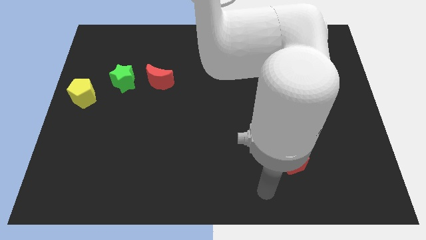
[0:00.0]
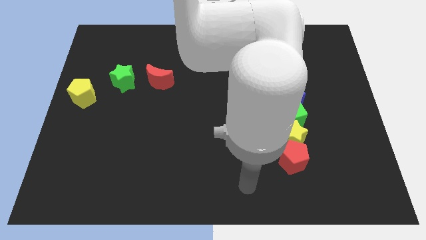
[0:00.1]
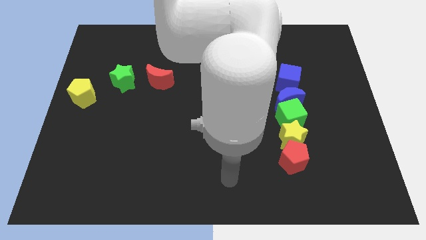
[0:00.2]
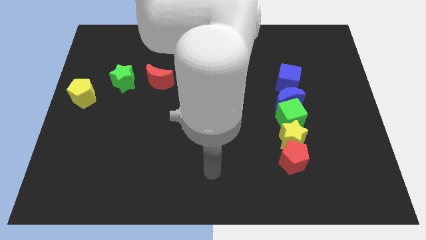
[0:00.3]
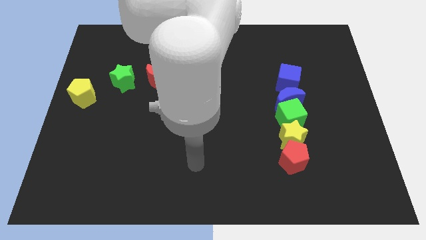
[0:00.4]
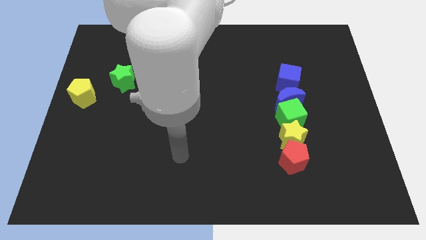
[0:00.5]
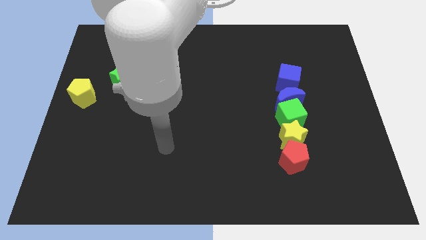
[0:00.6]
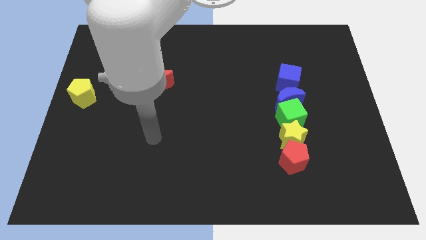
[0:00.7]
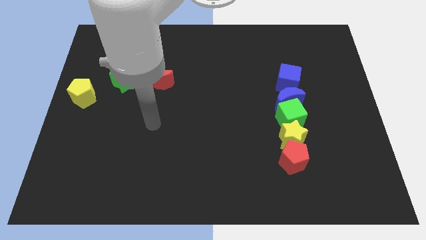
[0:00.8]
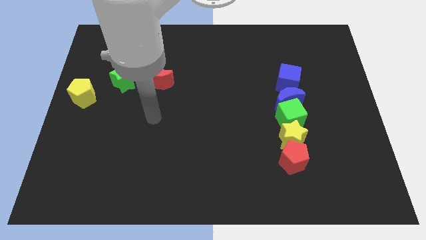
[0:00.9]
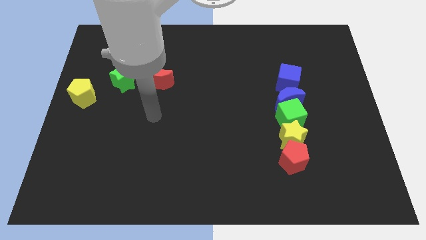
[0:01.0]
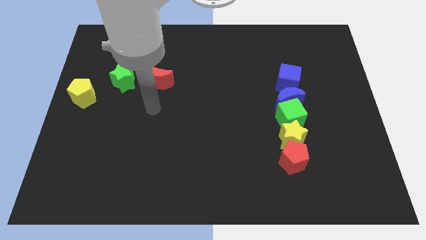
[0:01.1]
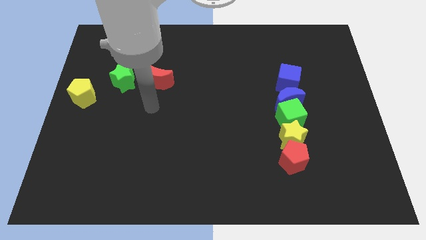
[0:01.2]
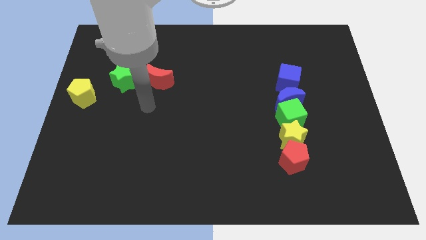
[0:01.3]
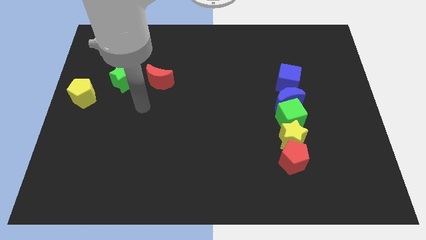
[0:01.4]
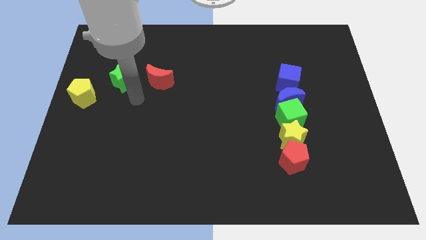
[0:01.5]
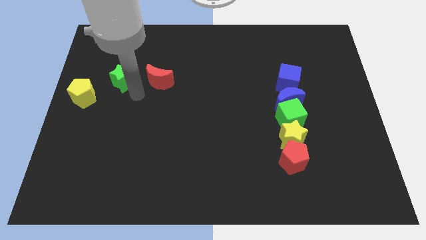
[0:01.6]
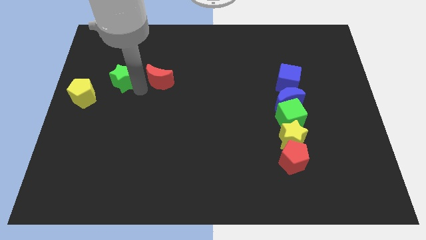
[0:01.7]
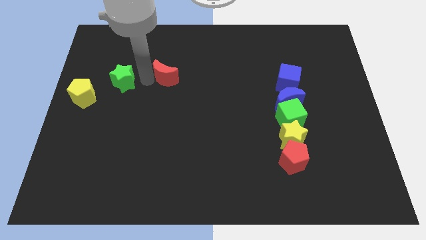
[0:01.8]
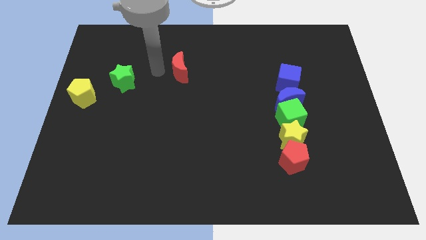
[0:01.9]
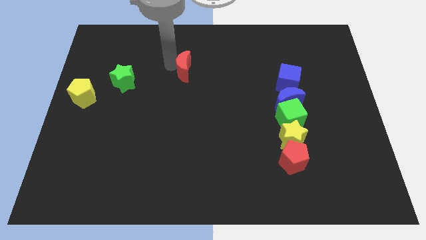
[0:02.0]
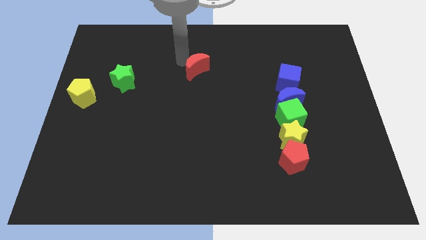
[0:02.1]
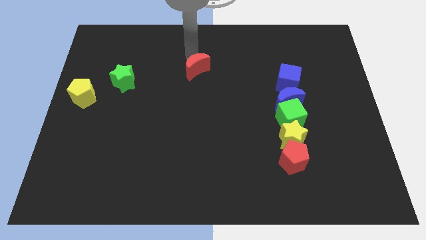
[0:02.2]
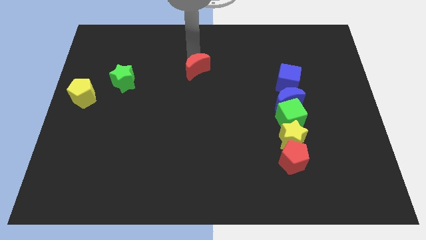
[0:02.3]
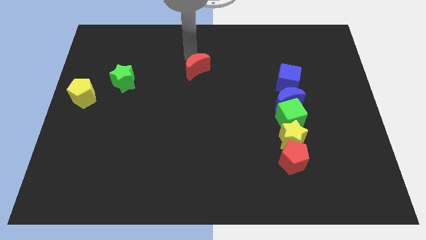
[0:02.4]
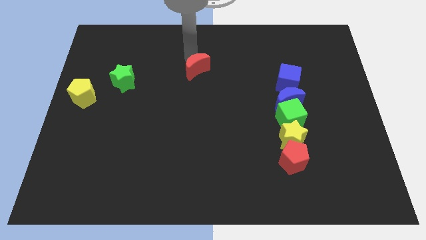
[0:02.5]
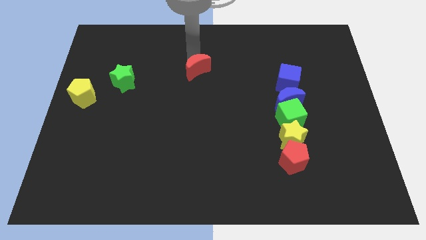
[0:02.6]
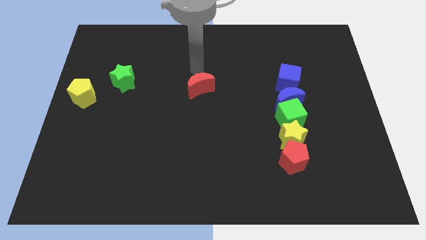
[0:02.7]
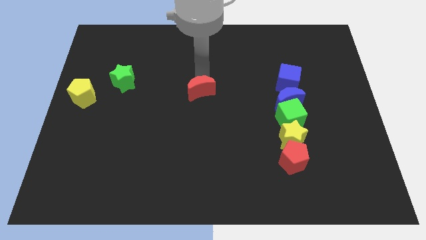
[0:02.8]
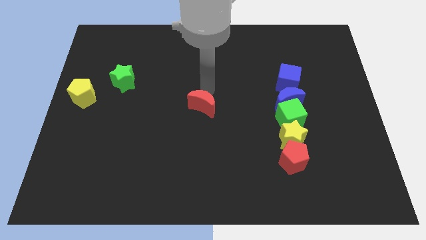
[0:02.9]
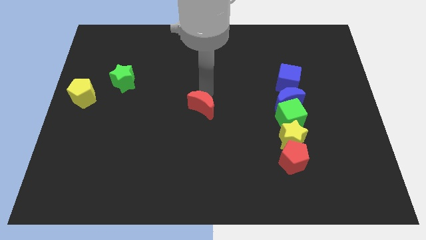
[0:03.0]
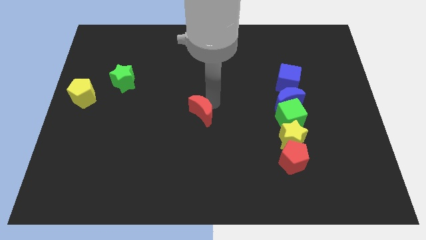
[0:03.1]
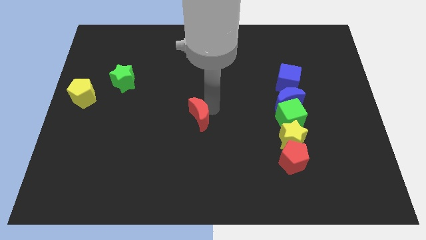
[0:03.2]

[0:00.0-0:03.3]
move the red crescent to the left of the vertical line of blocks

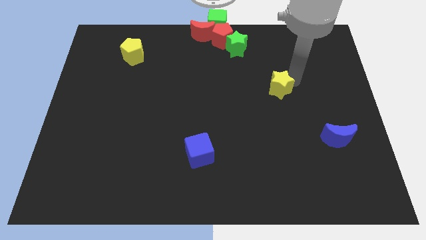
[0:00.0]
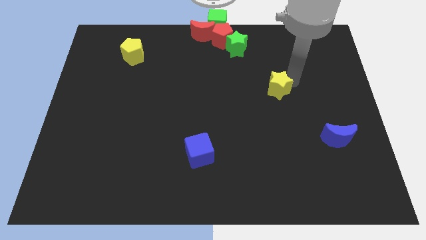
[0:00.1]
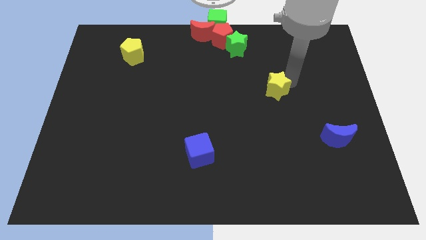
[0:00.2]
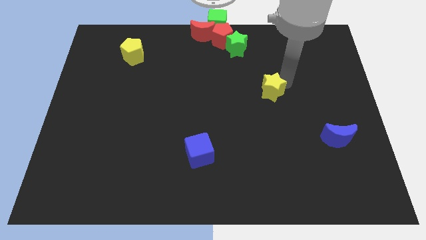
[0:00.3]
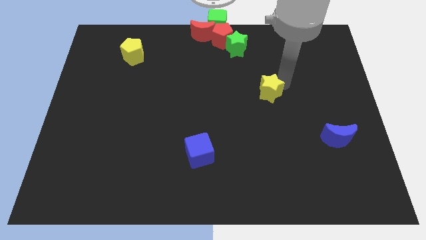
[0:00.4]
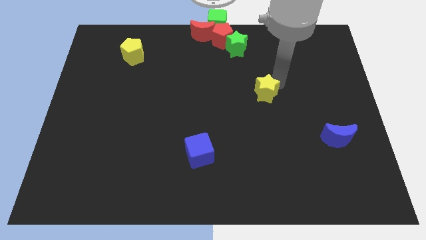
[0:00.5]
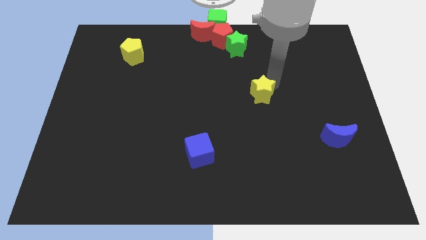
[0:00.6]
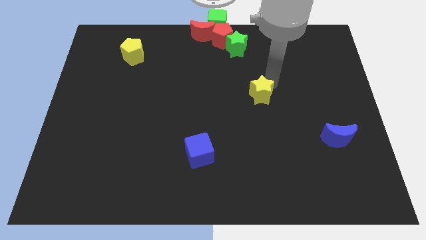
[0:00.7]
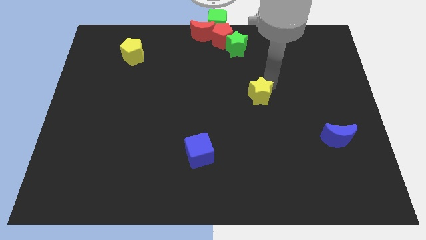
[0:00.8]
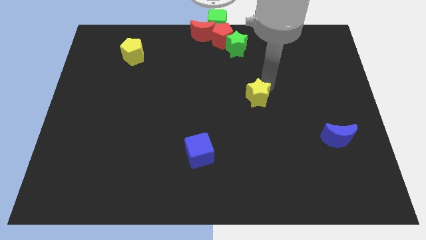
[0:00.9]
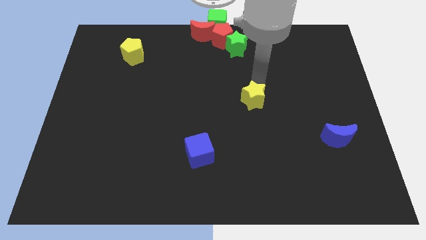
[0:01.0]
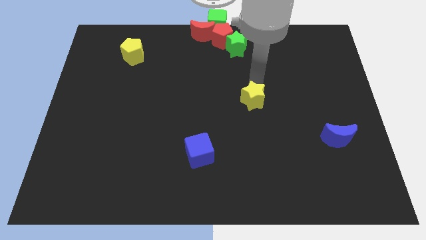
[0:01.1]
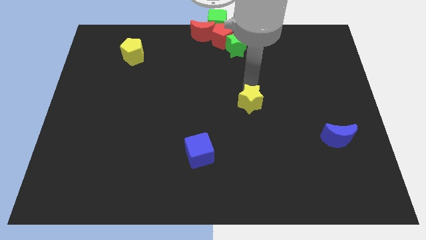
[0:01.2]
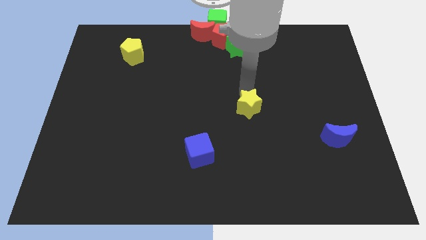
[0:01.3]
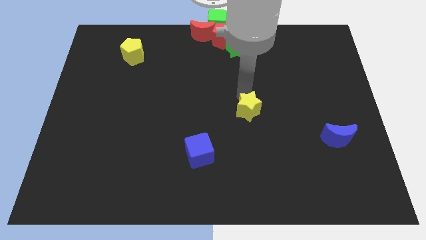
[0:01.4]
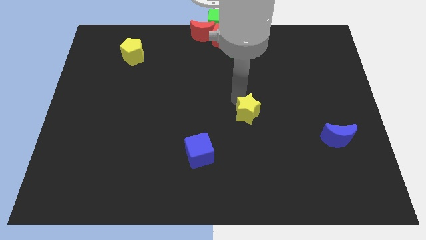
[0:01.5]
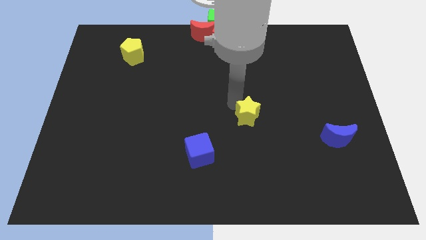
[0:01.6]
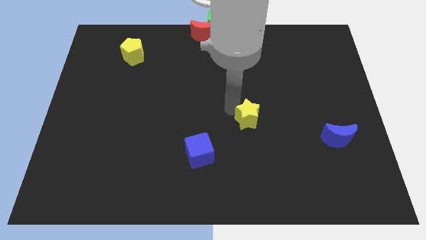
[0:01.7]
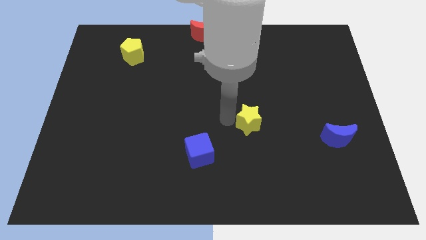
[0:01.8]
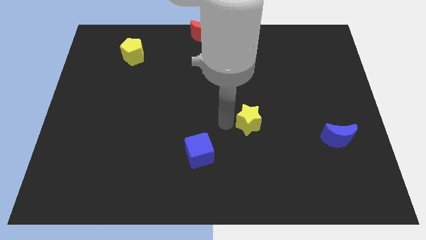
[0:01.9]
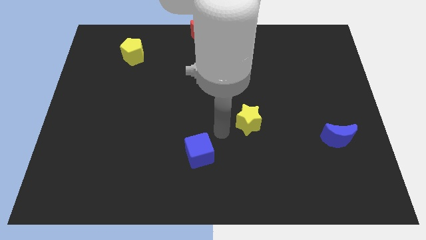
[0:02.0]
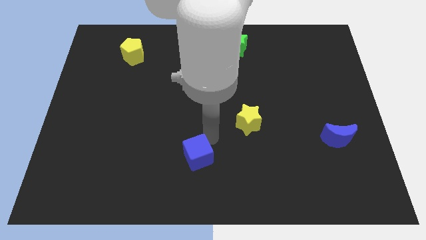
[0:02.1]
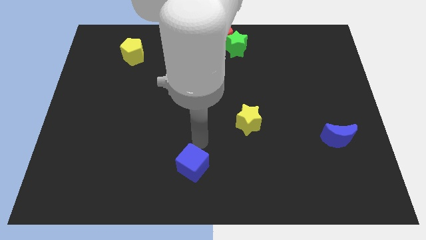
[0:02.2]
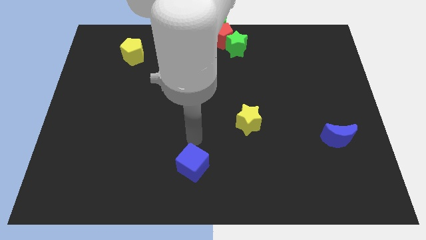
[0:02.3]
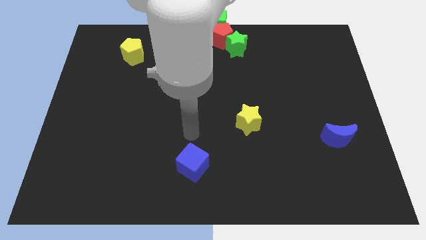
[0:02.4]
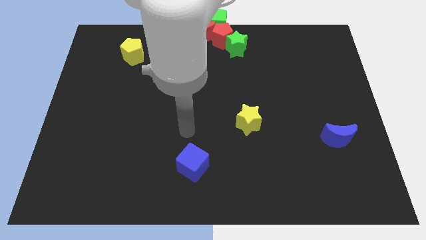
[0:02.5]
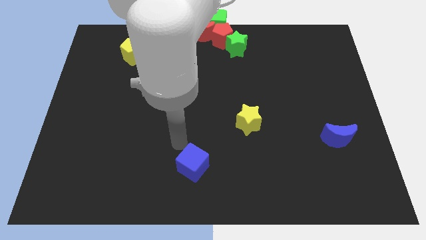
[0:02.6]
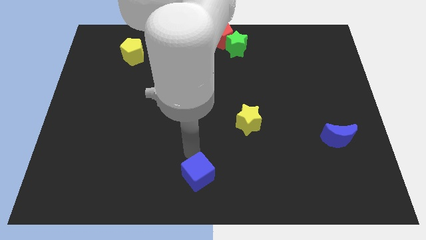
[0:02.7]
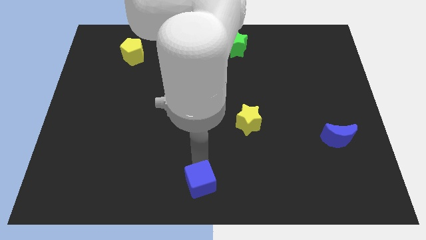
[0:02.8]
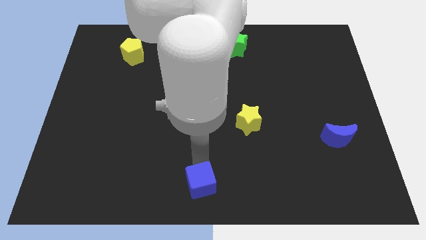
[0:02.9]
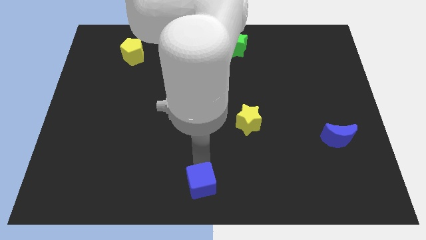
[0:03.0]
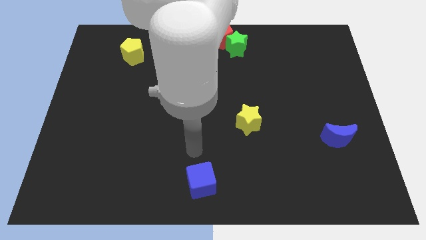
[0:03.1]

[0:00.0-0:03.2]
move the blue cube to the bottom center of the board

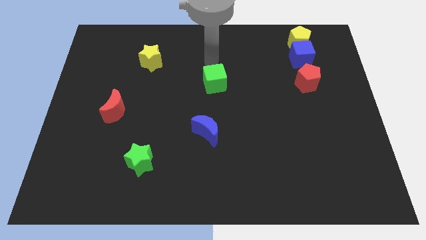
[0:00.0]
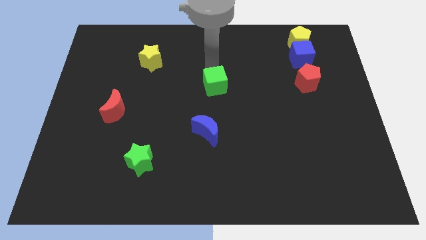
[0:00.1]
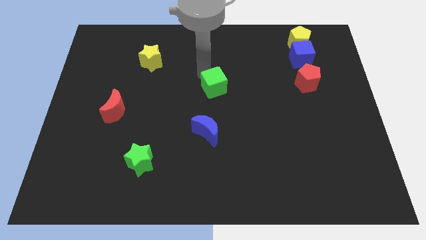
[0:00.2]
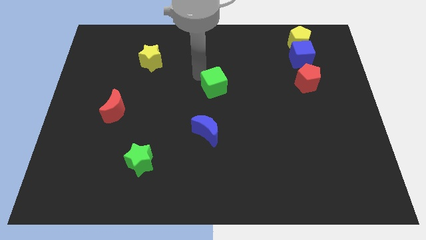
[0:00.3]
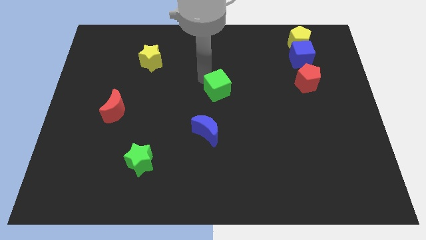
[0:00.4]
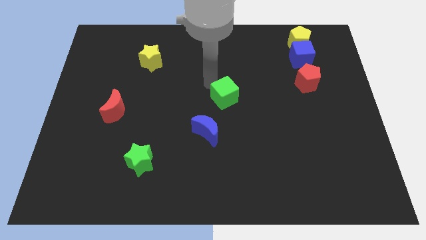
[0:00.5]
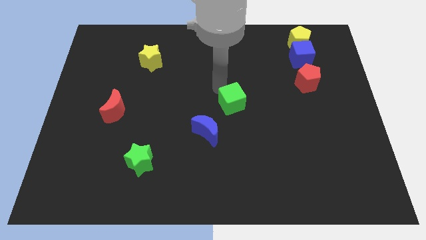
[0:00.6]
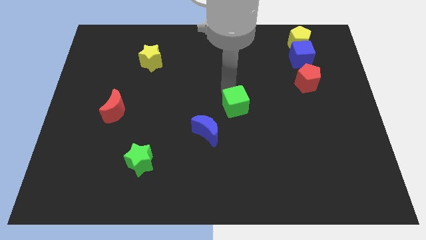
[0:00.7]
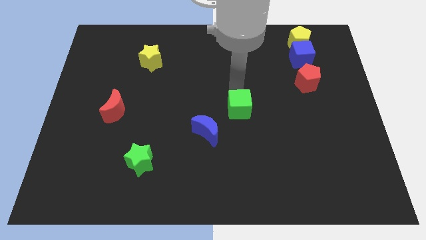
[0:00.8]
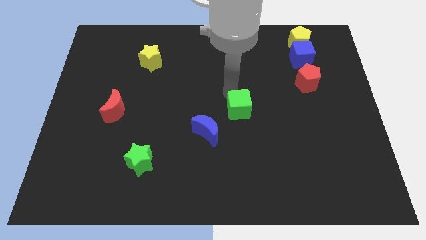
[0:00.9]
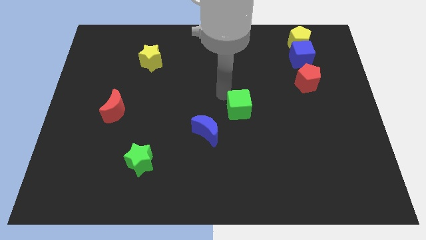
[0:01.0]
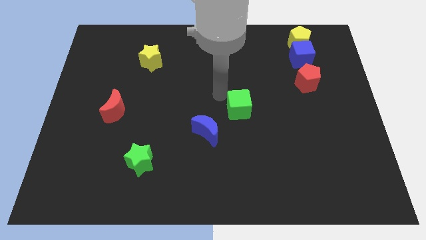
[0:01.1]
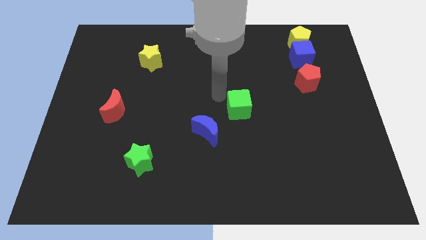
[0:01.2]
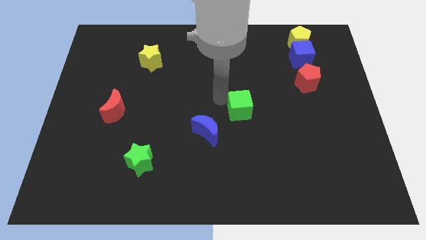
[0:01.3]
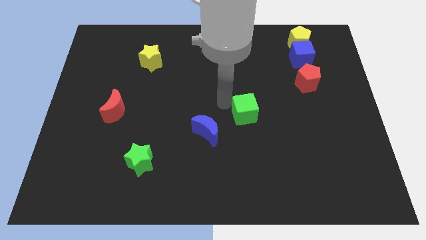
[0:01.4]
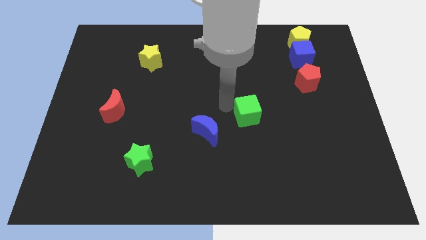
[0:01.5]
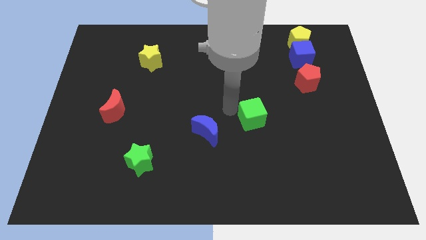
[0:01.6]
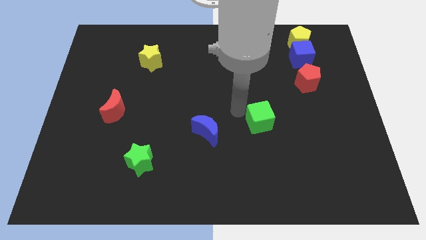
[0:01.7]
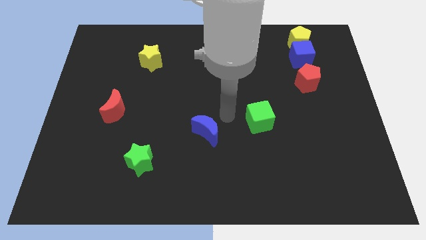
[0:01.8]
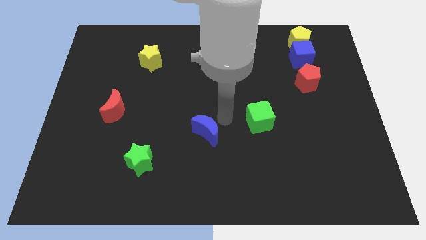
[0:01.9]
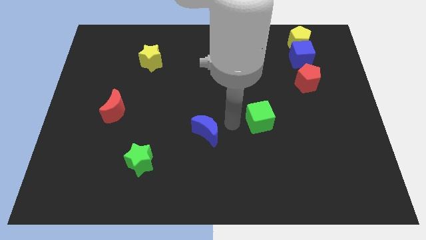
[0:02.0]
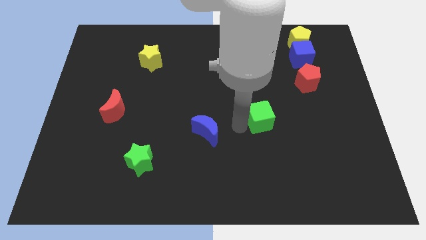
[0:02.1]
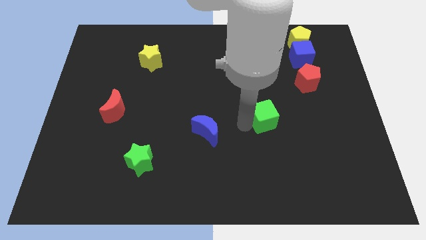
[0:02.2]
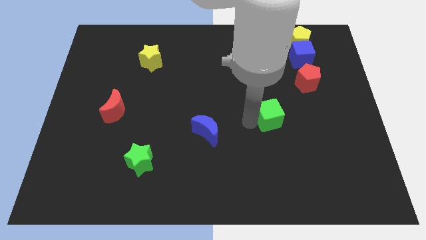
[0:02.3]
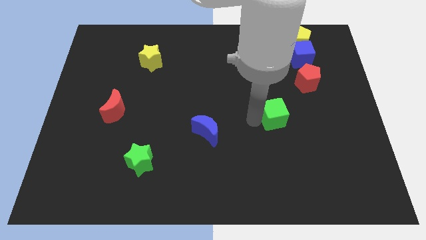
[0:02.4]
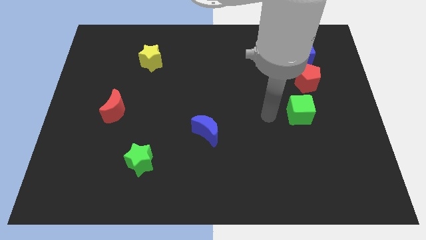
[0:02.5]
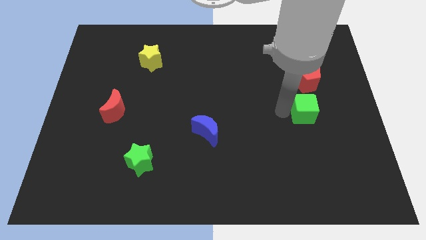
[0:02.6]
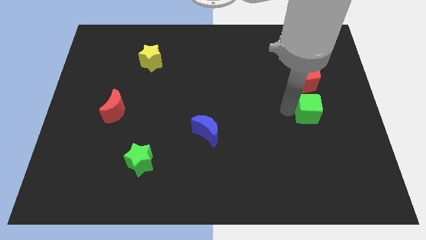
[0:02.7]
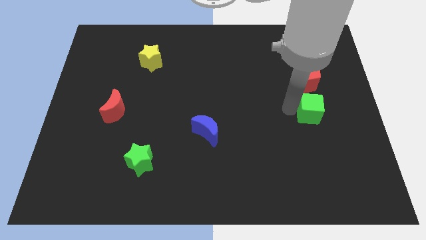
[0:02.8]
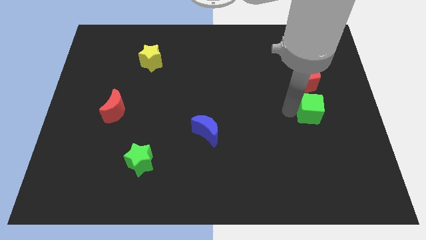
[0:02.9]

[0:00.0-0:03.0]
place green cube below red pentagon
